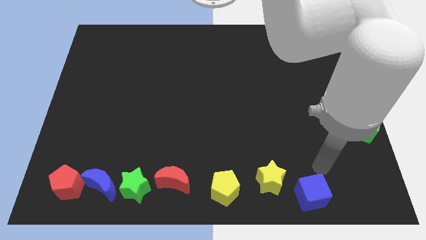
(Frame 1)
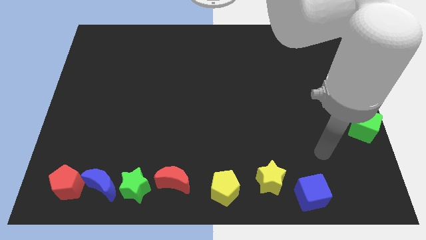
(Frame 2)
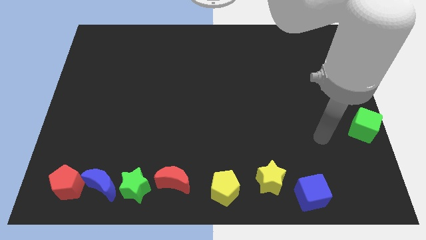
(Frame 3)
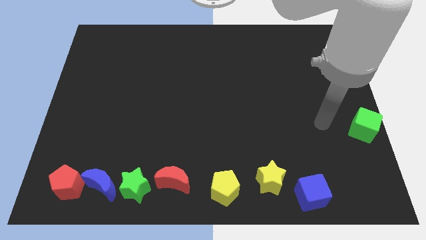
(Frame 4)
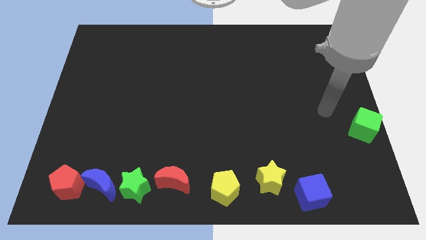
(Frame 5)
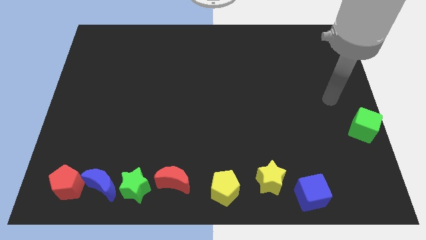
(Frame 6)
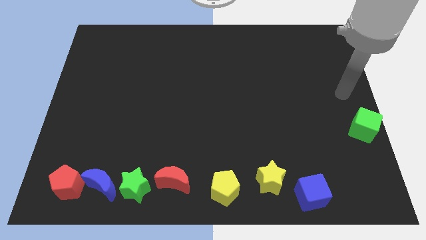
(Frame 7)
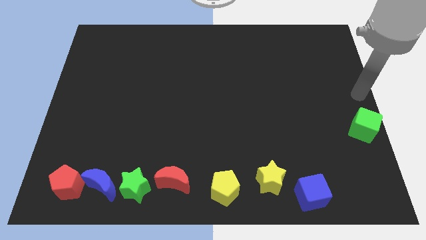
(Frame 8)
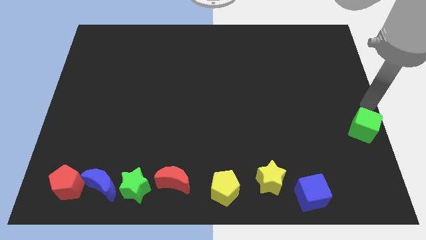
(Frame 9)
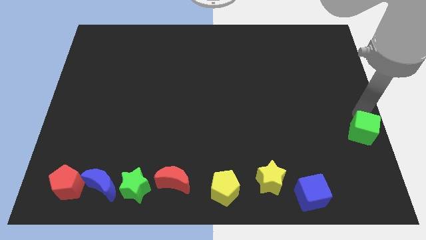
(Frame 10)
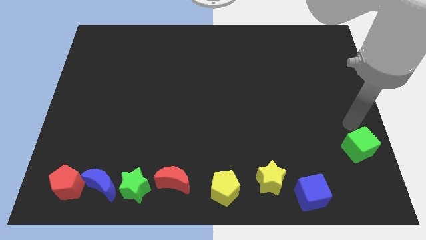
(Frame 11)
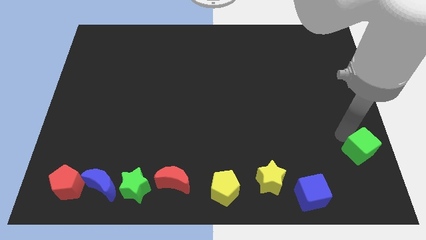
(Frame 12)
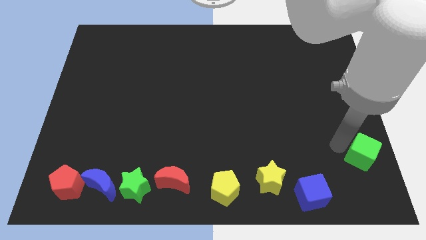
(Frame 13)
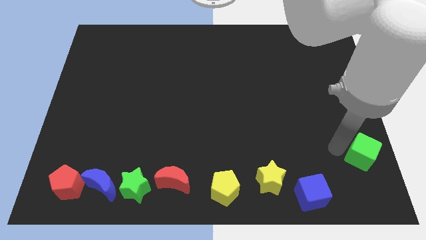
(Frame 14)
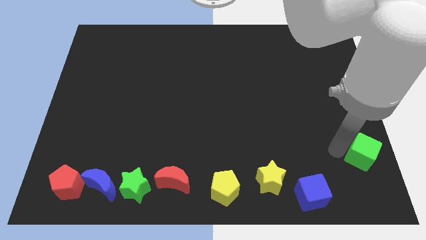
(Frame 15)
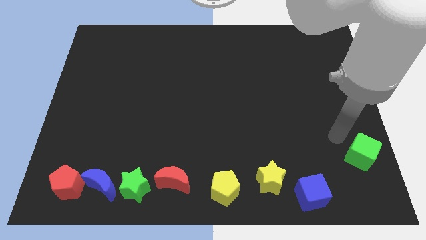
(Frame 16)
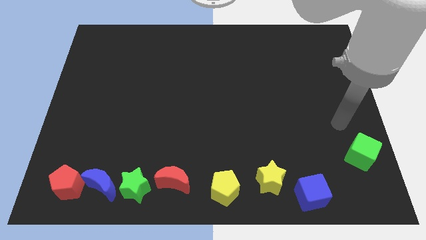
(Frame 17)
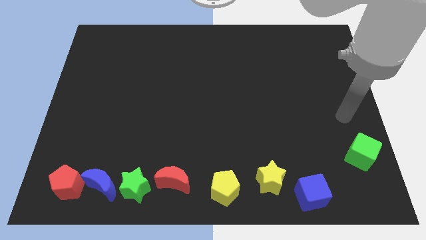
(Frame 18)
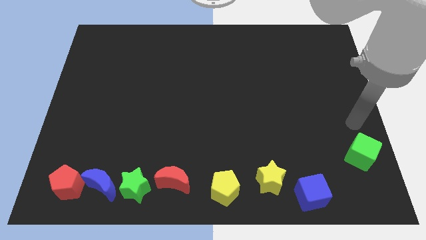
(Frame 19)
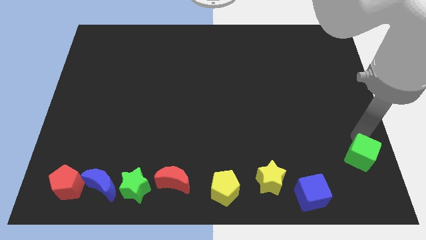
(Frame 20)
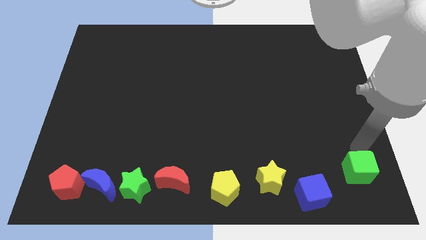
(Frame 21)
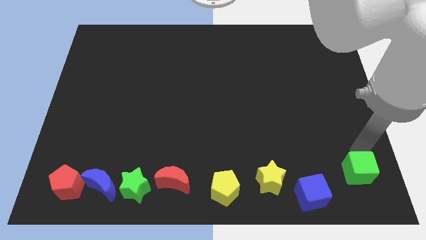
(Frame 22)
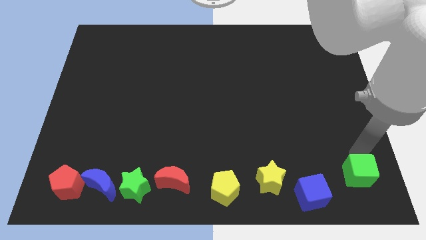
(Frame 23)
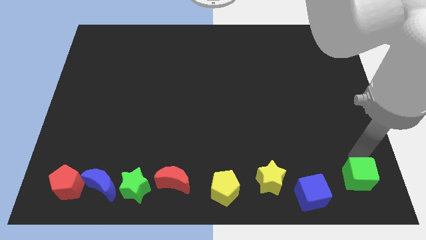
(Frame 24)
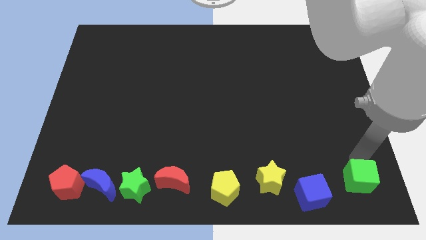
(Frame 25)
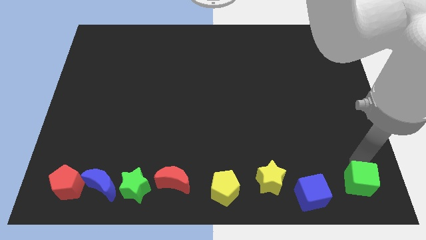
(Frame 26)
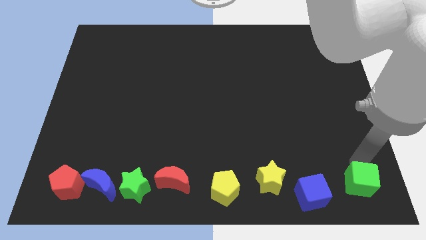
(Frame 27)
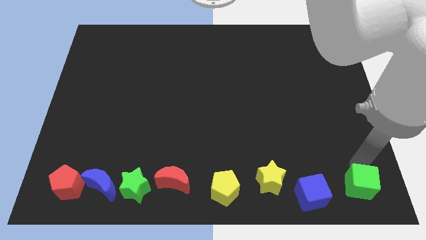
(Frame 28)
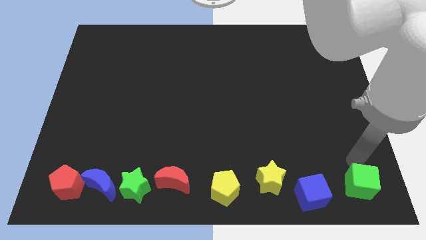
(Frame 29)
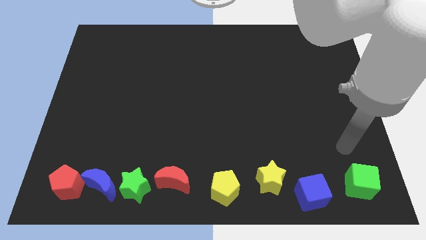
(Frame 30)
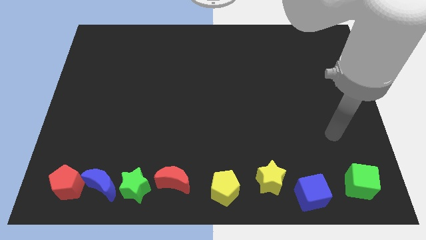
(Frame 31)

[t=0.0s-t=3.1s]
push the green cube to the right of the blue cube

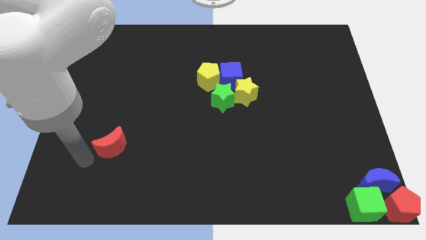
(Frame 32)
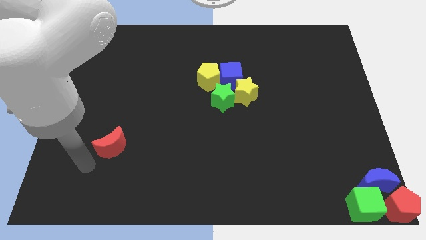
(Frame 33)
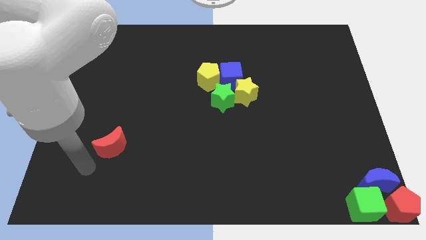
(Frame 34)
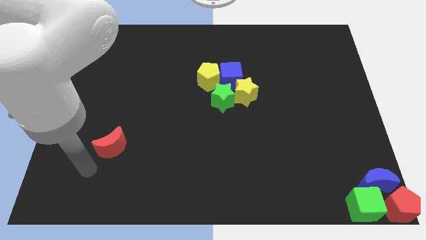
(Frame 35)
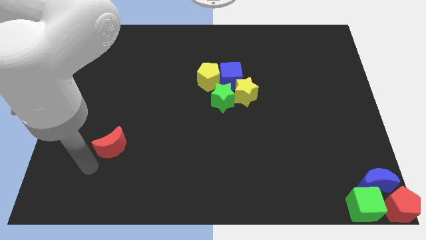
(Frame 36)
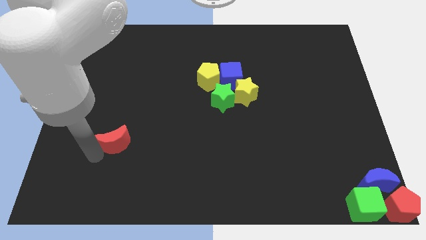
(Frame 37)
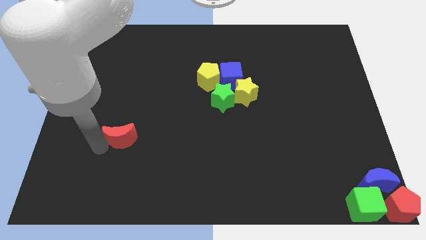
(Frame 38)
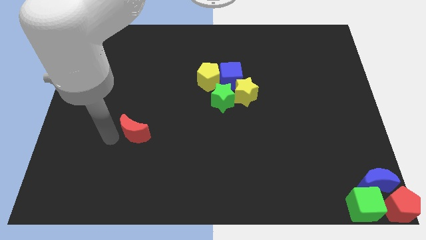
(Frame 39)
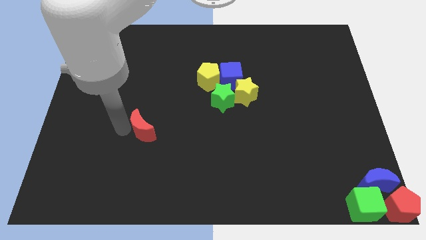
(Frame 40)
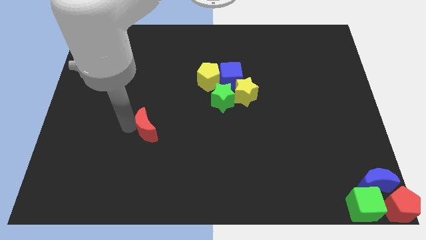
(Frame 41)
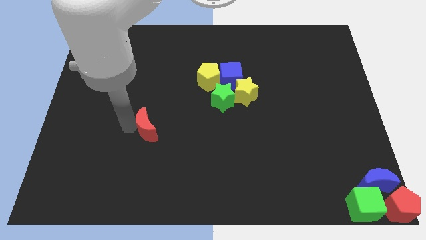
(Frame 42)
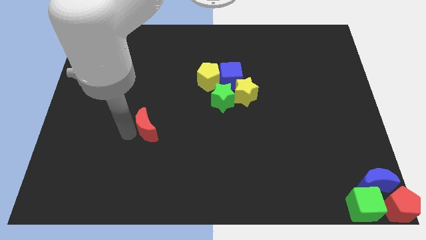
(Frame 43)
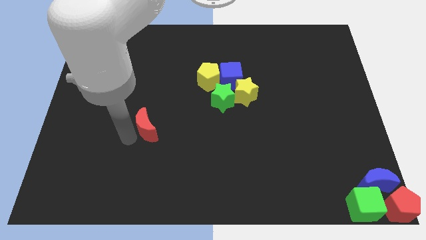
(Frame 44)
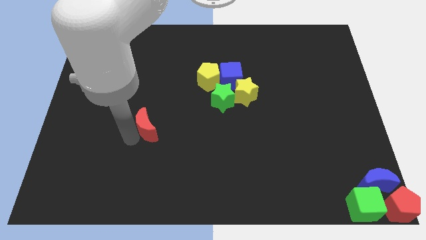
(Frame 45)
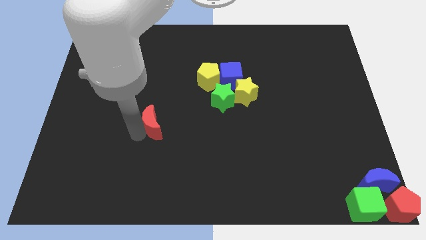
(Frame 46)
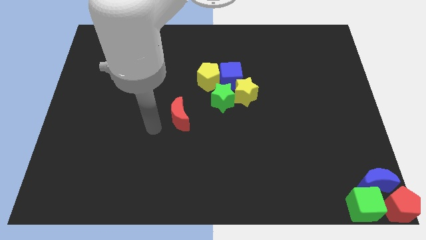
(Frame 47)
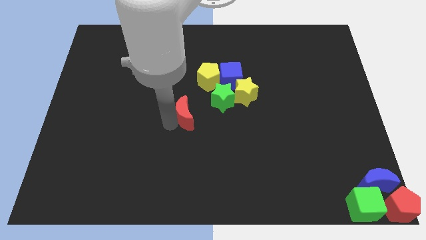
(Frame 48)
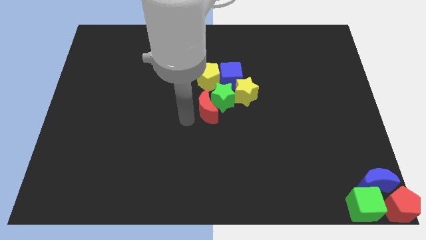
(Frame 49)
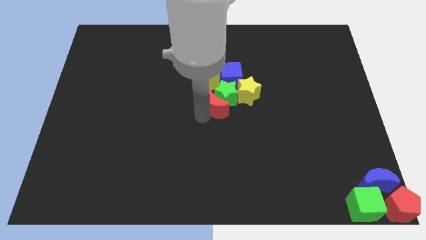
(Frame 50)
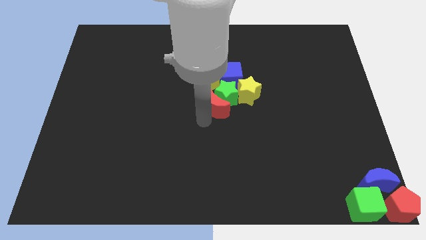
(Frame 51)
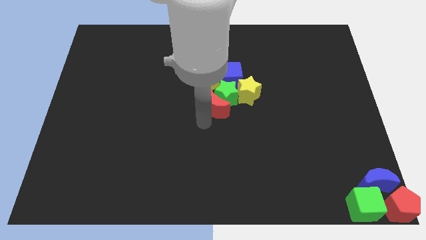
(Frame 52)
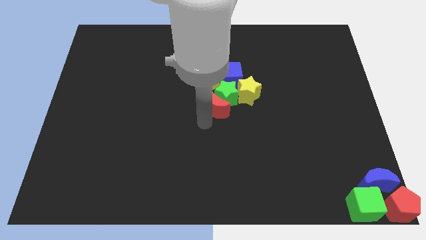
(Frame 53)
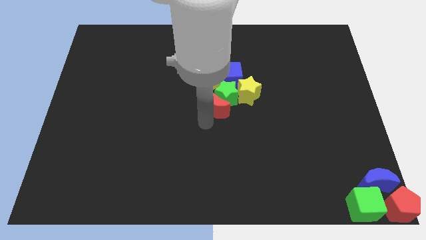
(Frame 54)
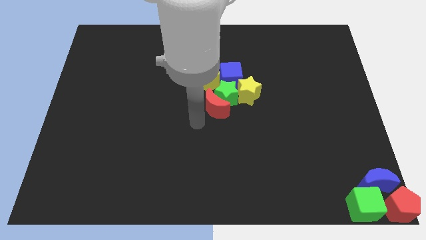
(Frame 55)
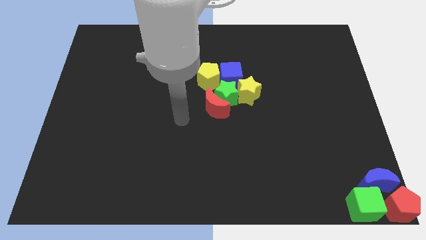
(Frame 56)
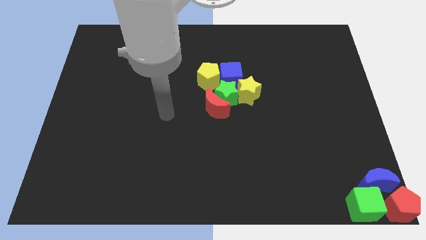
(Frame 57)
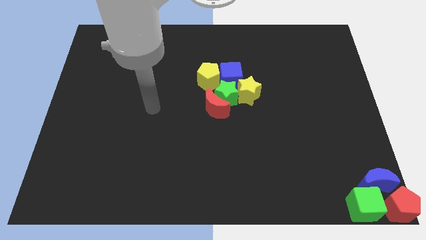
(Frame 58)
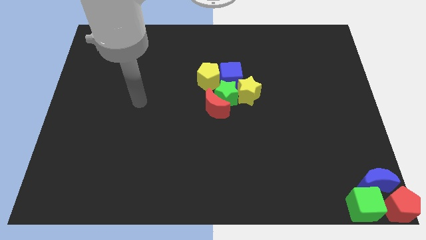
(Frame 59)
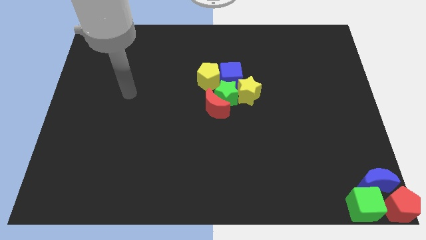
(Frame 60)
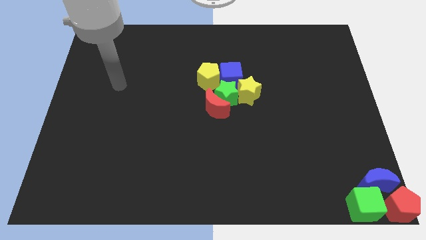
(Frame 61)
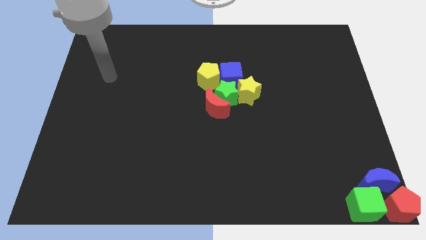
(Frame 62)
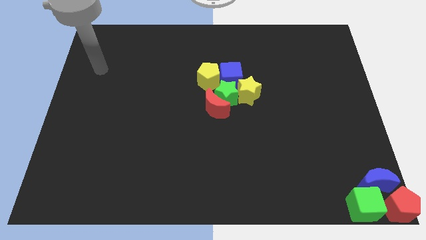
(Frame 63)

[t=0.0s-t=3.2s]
slide red moon into group of blocks in the center

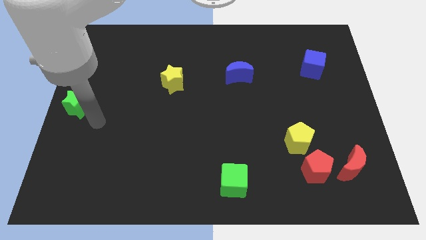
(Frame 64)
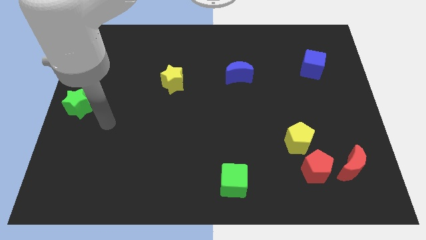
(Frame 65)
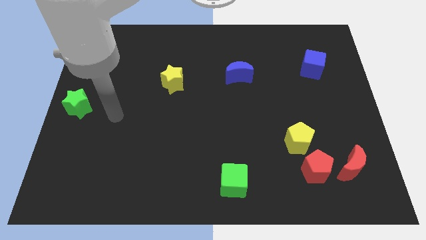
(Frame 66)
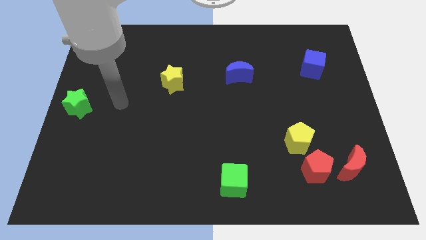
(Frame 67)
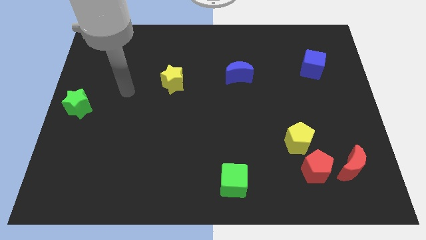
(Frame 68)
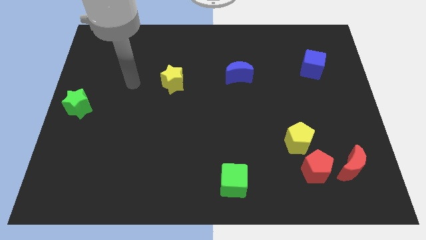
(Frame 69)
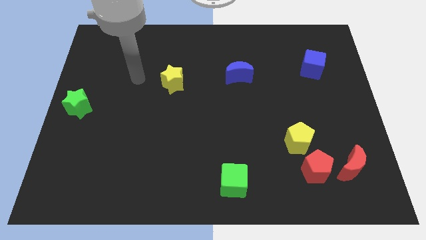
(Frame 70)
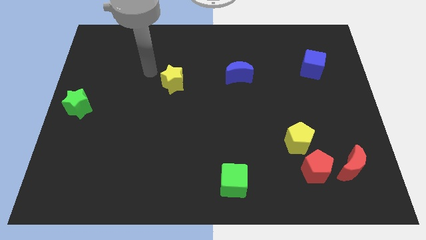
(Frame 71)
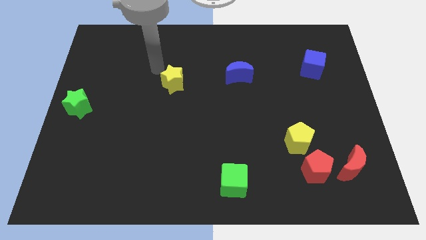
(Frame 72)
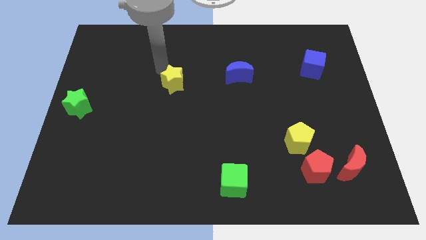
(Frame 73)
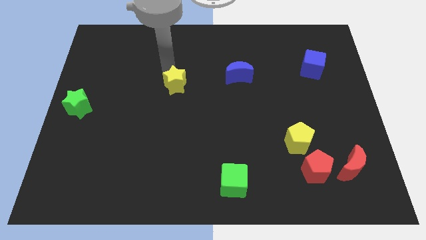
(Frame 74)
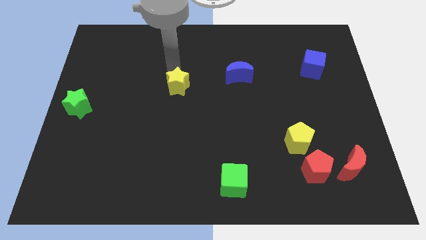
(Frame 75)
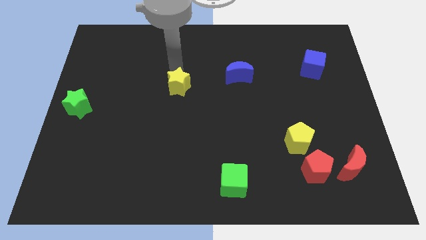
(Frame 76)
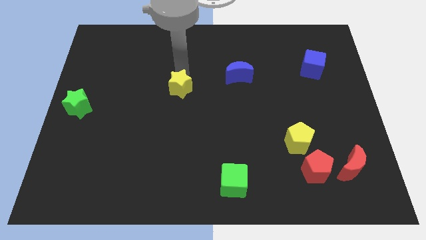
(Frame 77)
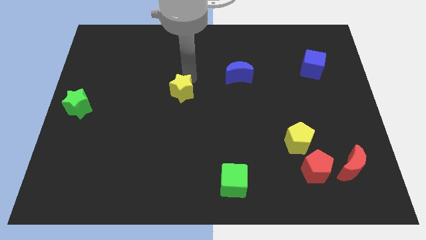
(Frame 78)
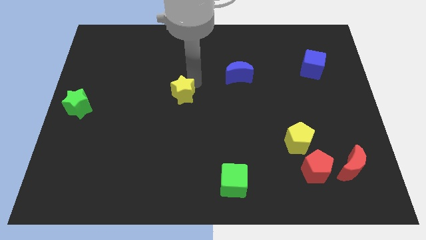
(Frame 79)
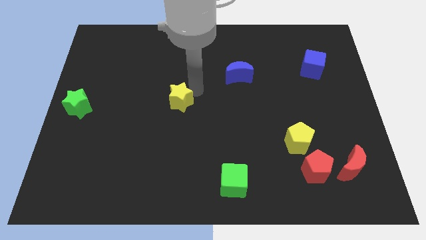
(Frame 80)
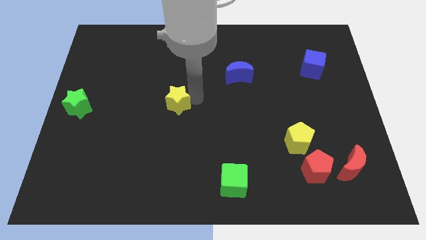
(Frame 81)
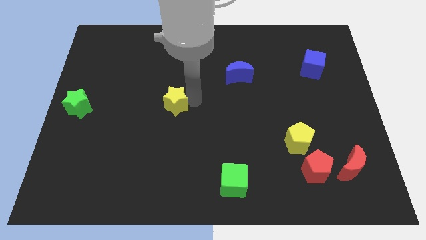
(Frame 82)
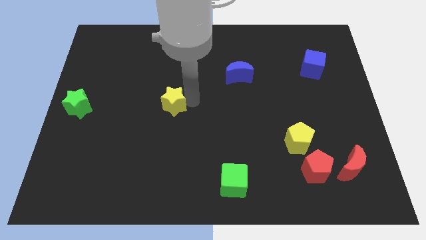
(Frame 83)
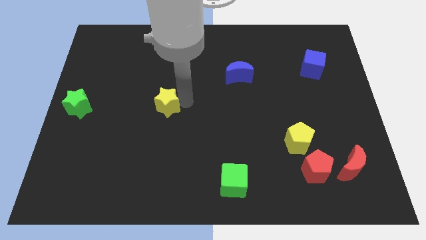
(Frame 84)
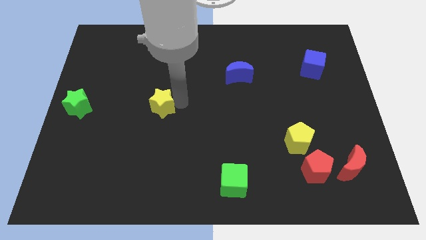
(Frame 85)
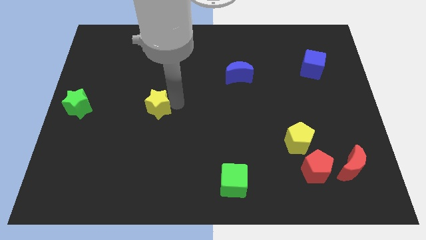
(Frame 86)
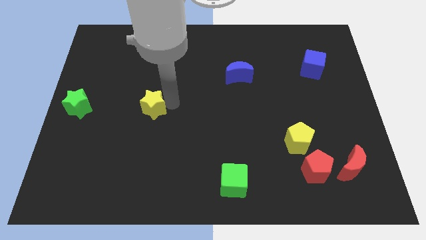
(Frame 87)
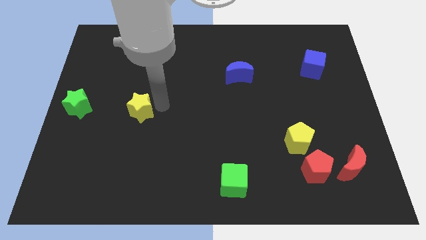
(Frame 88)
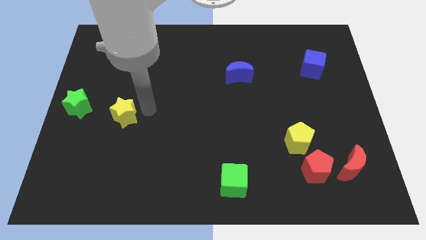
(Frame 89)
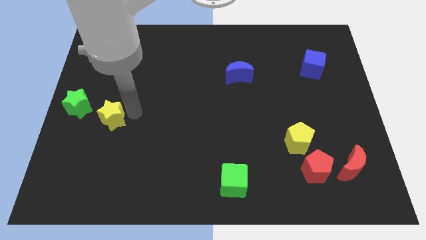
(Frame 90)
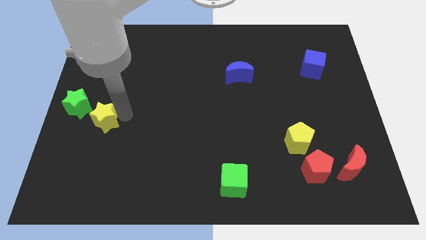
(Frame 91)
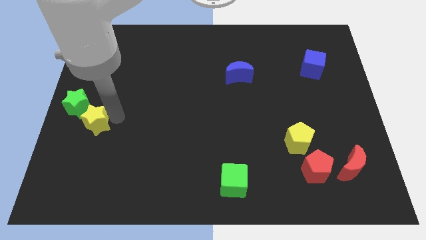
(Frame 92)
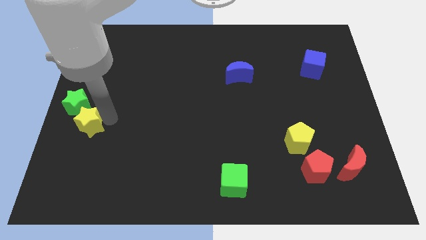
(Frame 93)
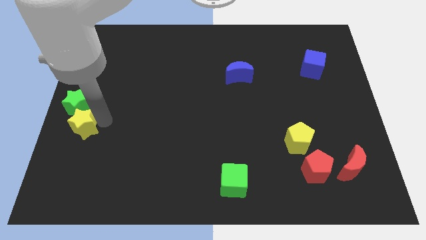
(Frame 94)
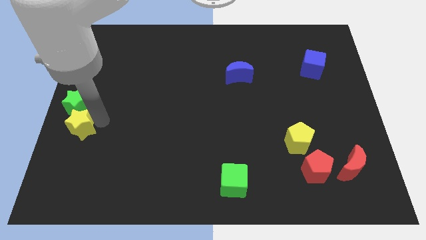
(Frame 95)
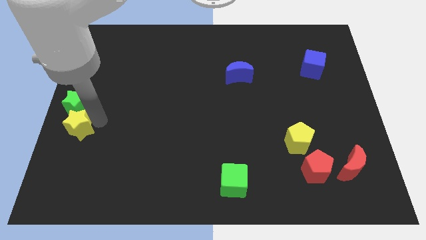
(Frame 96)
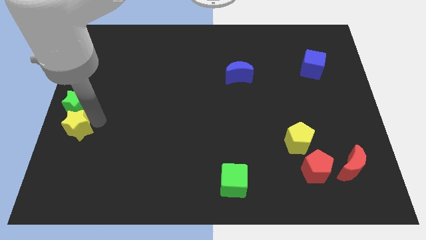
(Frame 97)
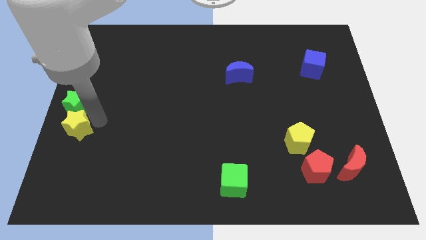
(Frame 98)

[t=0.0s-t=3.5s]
push the yellow star to the bottom of the green star
